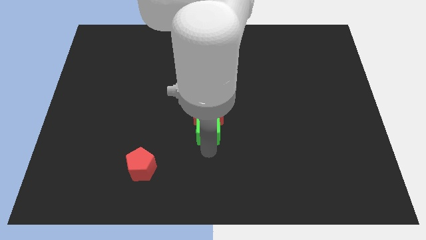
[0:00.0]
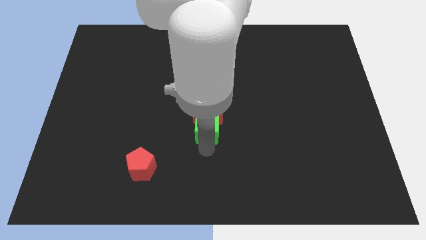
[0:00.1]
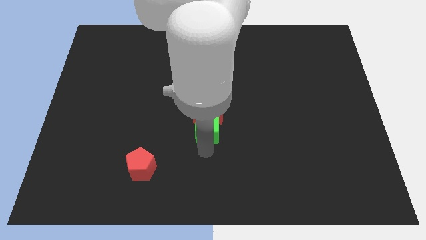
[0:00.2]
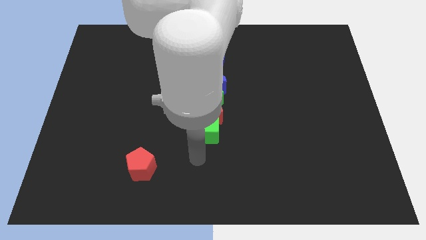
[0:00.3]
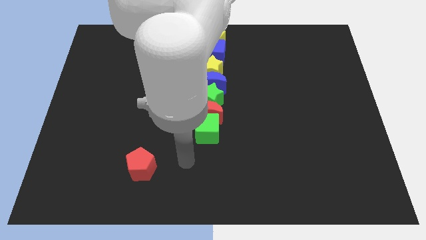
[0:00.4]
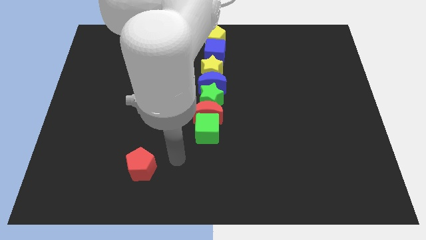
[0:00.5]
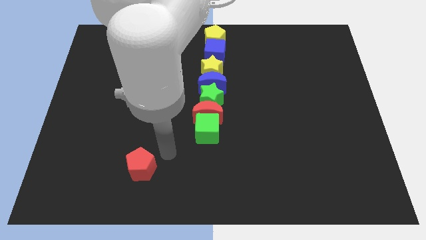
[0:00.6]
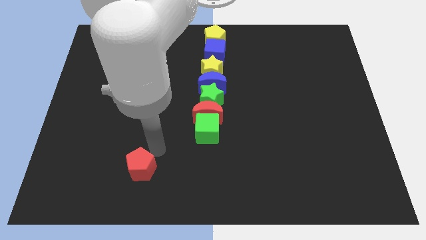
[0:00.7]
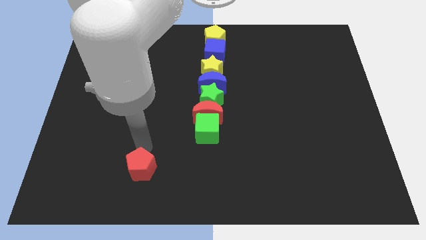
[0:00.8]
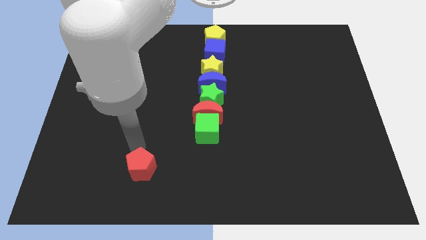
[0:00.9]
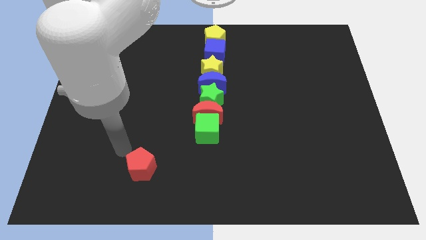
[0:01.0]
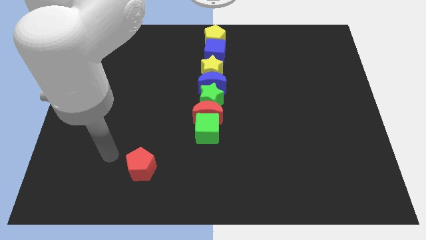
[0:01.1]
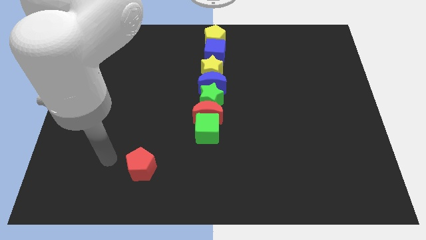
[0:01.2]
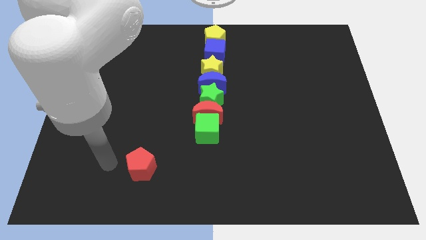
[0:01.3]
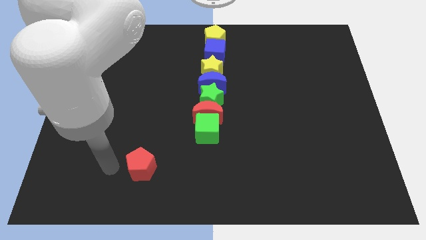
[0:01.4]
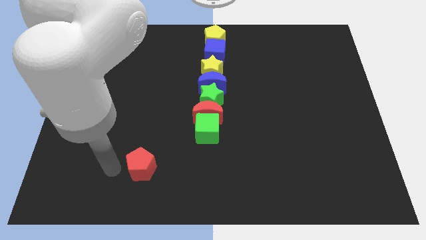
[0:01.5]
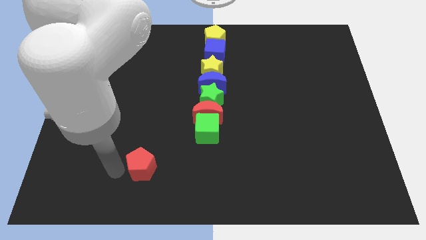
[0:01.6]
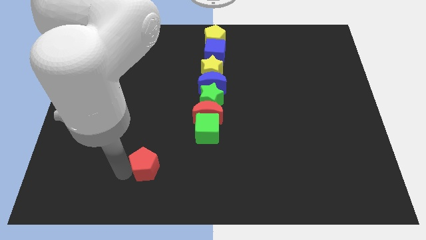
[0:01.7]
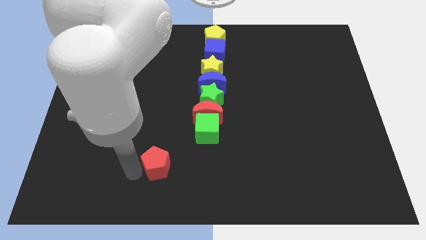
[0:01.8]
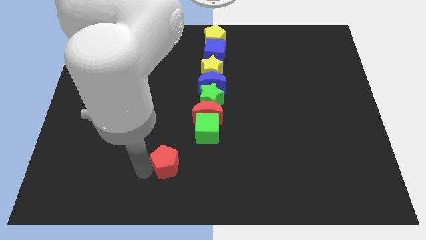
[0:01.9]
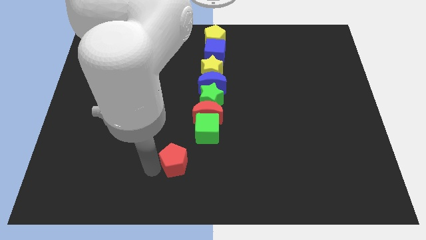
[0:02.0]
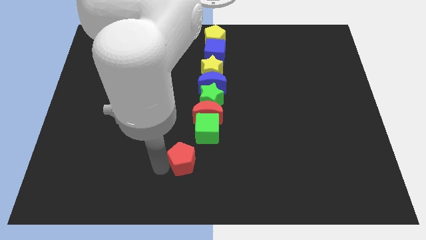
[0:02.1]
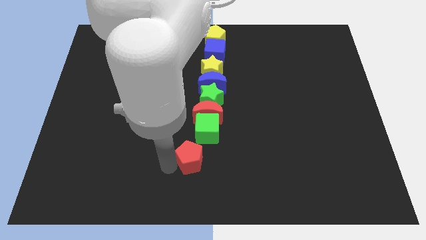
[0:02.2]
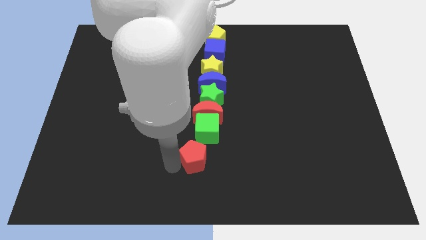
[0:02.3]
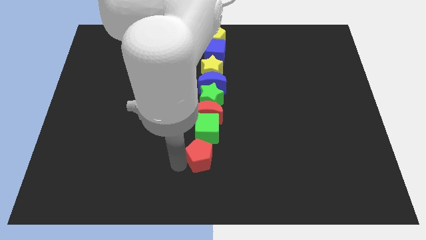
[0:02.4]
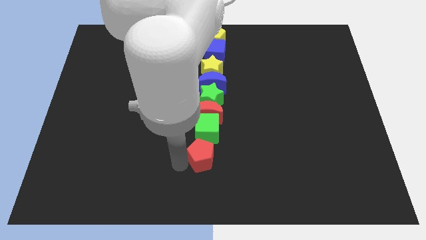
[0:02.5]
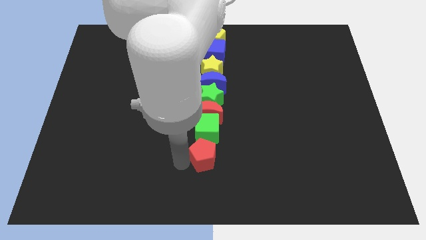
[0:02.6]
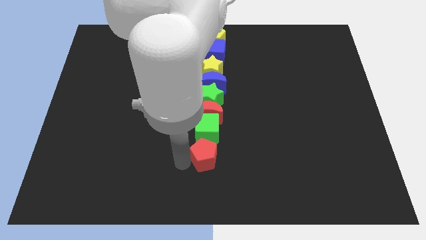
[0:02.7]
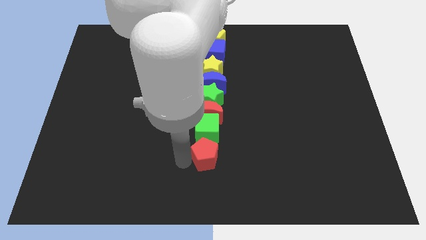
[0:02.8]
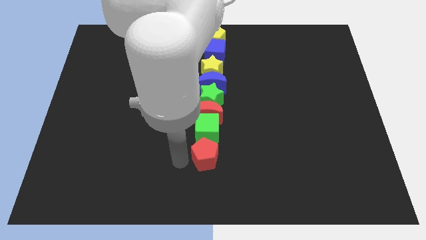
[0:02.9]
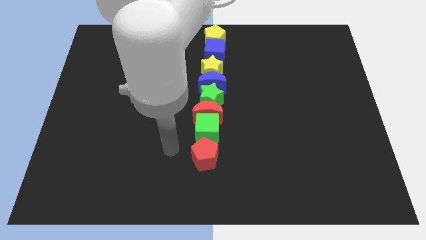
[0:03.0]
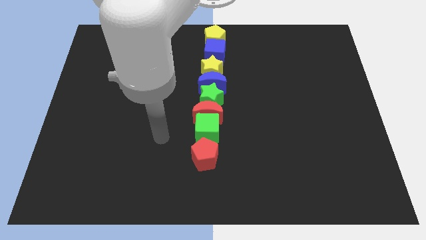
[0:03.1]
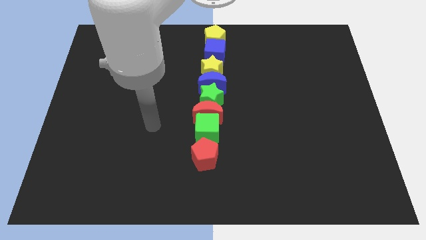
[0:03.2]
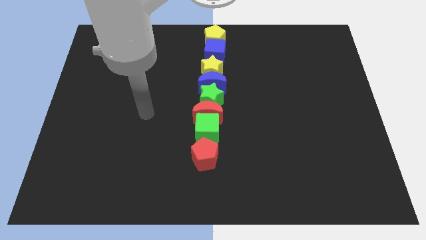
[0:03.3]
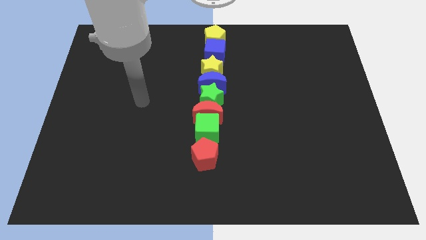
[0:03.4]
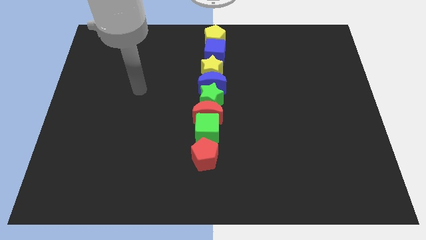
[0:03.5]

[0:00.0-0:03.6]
push the red pentagon and place it below the green cube

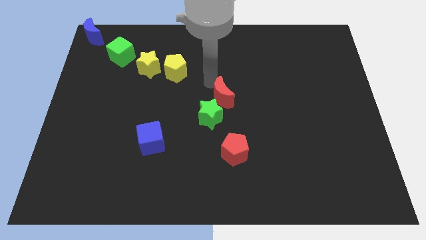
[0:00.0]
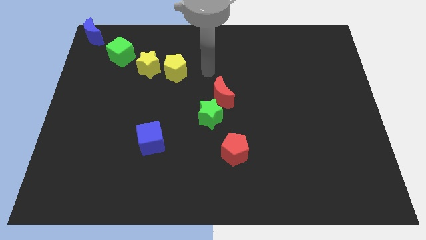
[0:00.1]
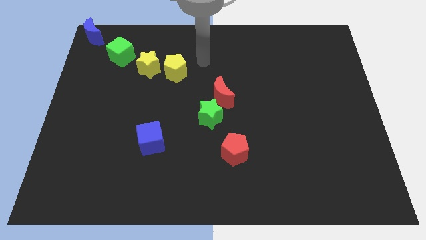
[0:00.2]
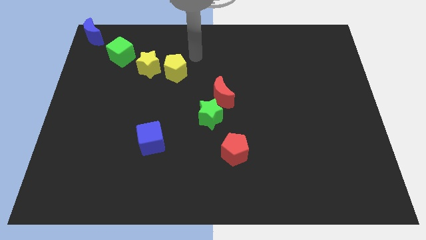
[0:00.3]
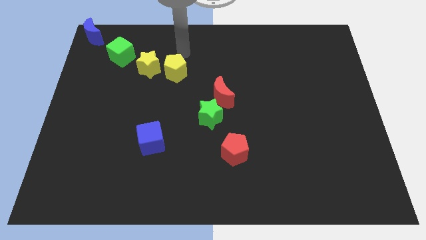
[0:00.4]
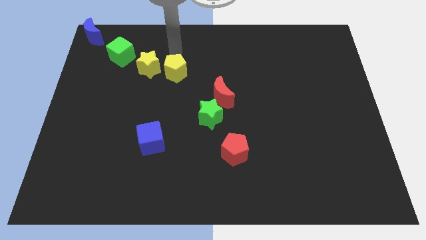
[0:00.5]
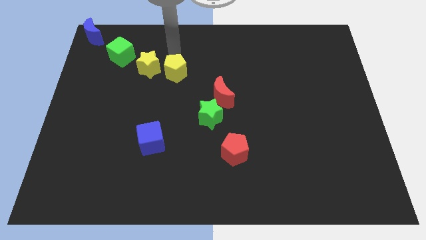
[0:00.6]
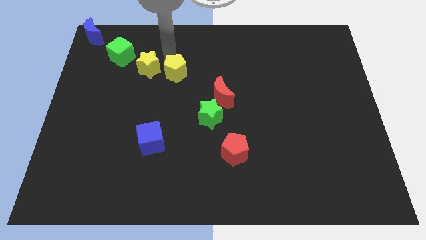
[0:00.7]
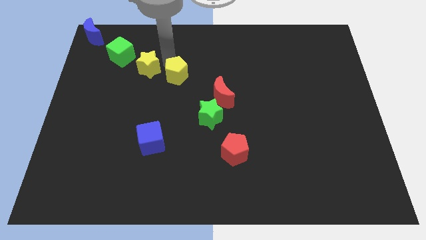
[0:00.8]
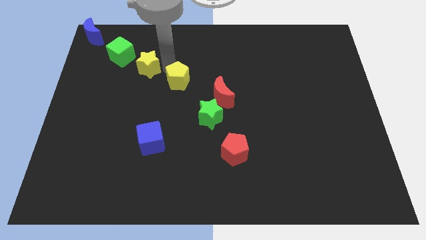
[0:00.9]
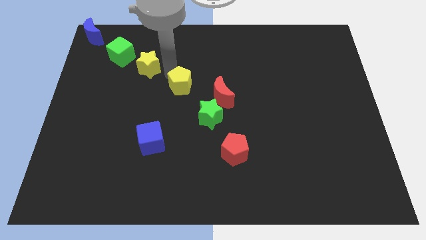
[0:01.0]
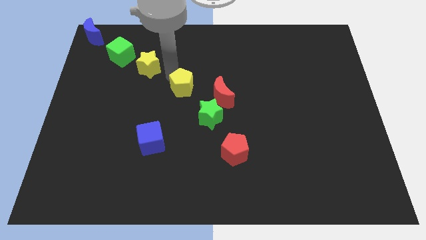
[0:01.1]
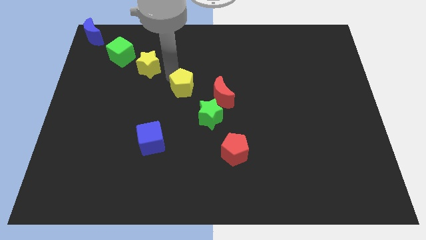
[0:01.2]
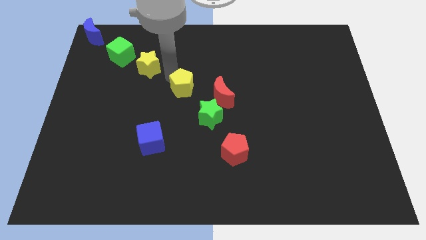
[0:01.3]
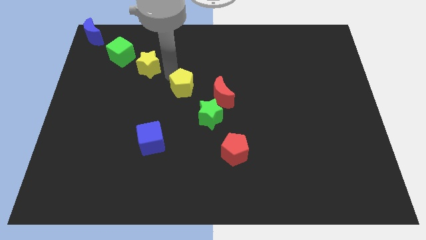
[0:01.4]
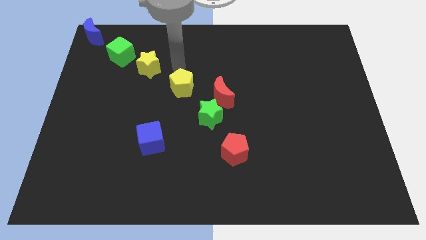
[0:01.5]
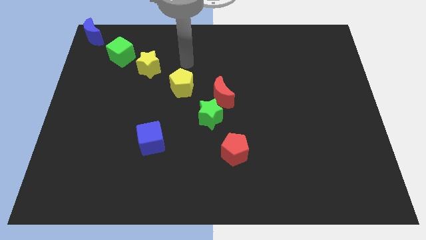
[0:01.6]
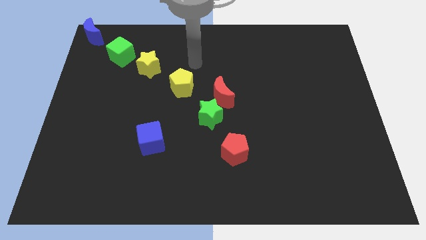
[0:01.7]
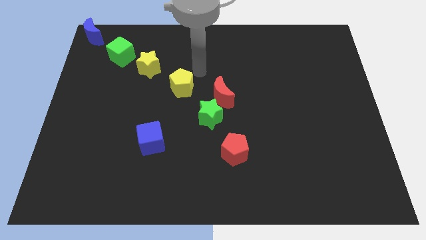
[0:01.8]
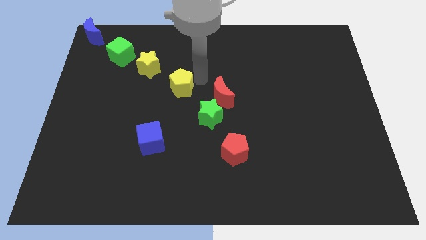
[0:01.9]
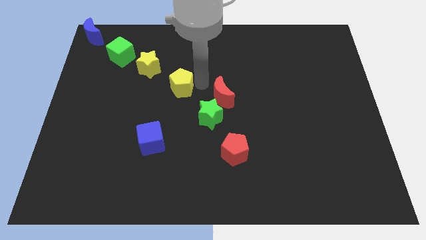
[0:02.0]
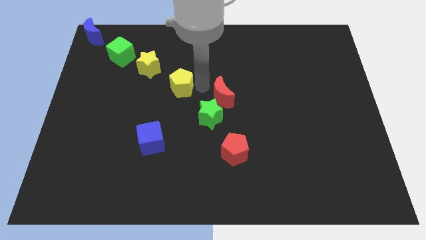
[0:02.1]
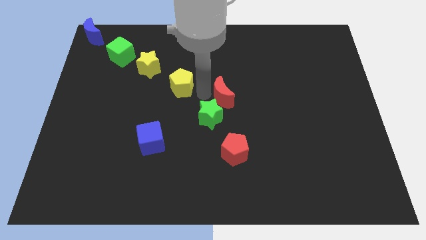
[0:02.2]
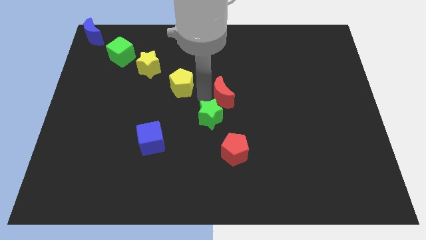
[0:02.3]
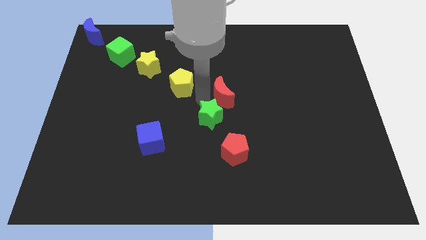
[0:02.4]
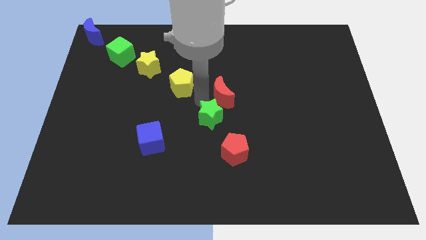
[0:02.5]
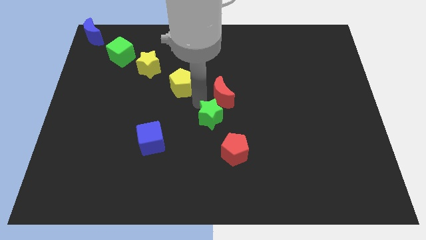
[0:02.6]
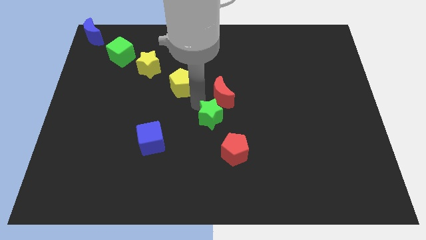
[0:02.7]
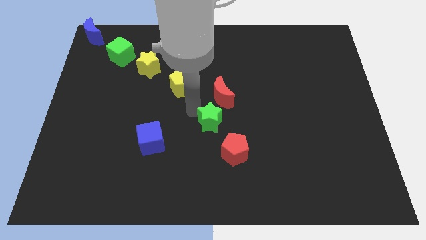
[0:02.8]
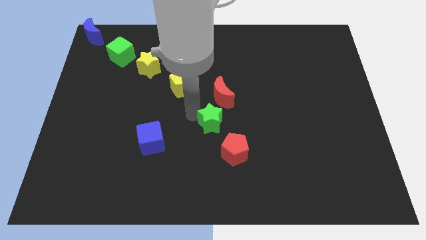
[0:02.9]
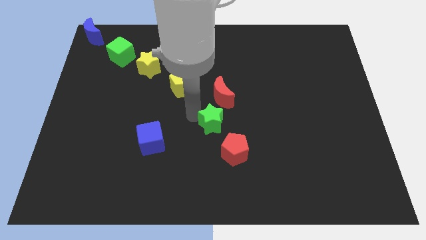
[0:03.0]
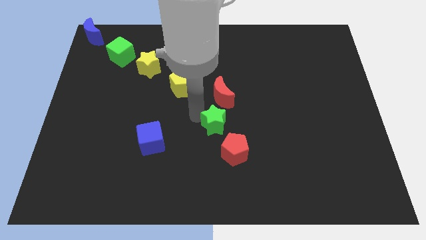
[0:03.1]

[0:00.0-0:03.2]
move the yellow pentagon to the left of the red moon

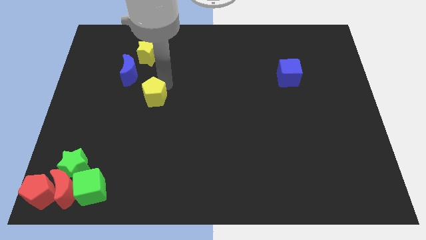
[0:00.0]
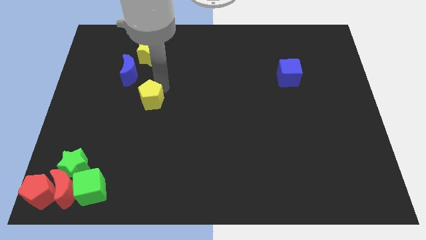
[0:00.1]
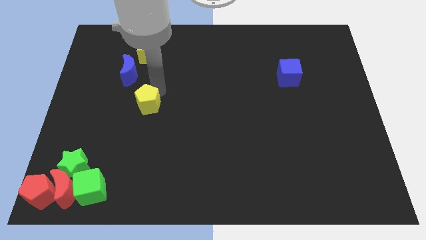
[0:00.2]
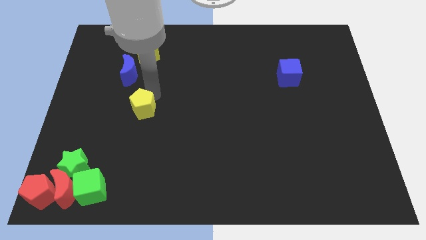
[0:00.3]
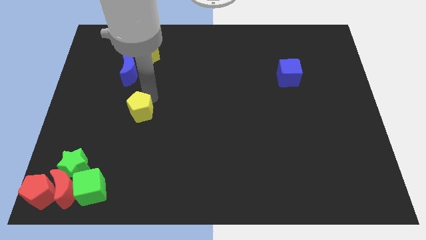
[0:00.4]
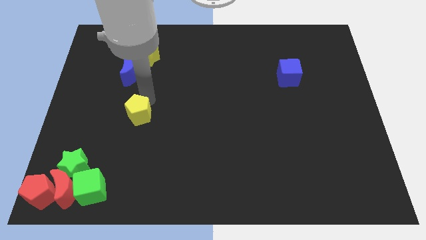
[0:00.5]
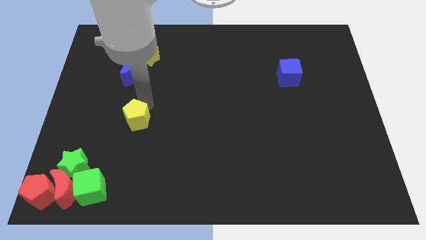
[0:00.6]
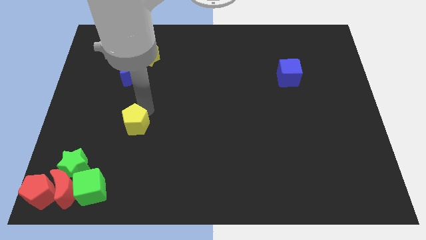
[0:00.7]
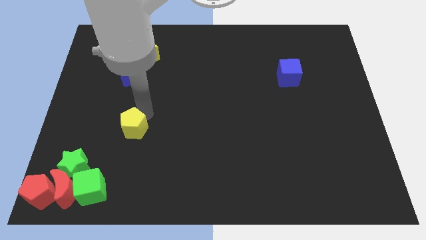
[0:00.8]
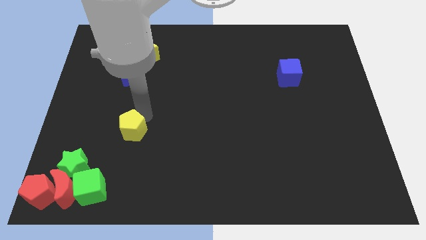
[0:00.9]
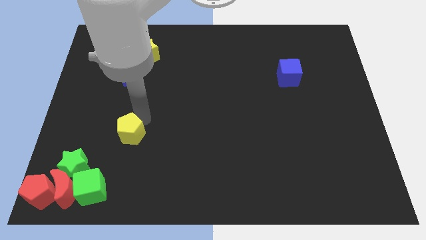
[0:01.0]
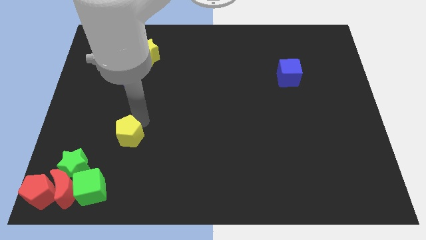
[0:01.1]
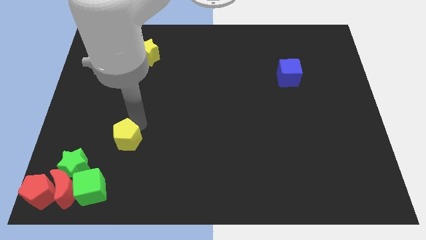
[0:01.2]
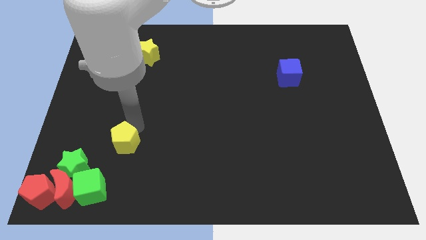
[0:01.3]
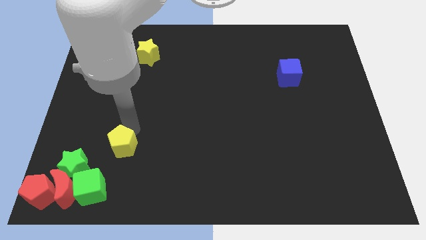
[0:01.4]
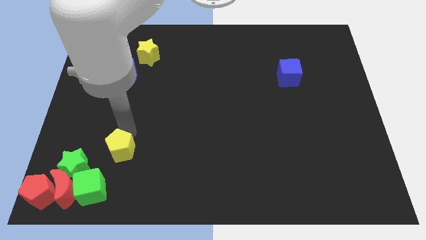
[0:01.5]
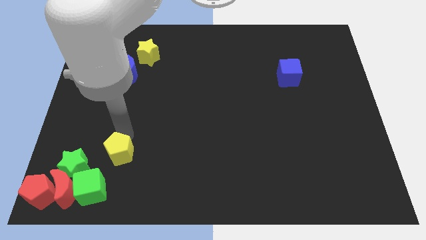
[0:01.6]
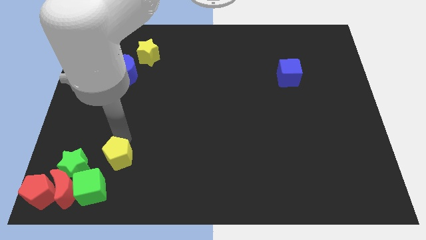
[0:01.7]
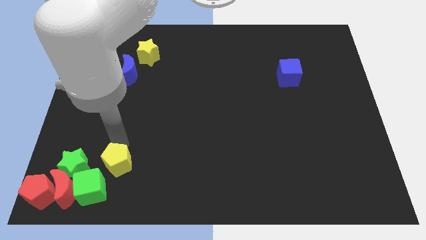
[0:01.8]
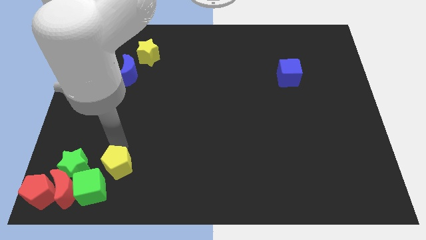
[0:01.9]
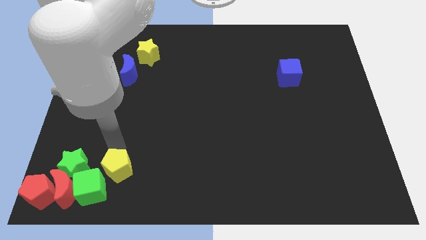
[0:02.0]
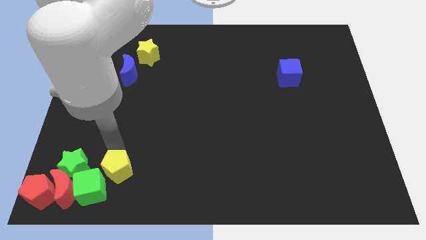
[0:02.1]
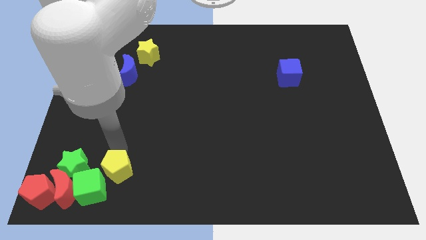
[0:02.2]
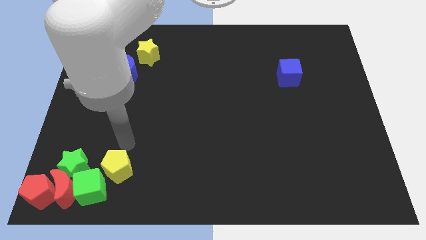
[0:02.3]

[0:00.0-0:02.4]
place the yellow pentagon at the top right of the green cube
